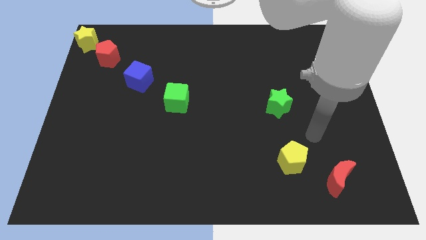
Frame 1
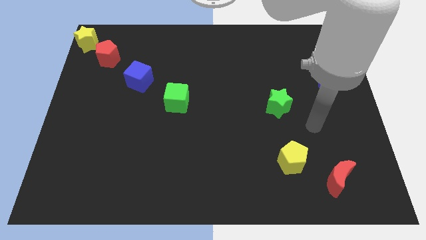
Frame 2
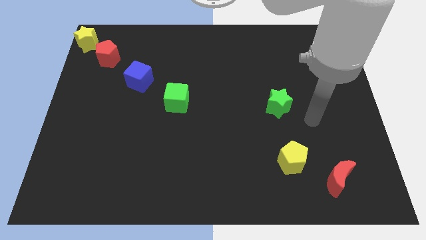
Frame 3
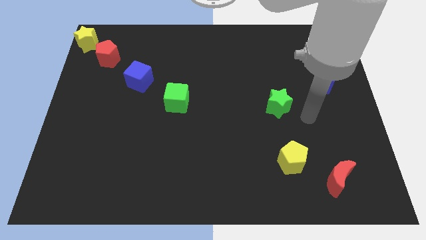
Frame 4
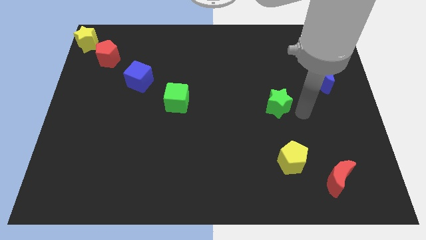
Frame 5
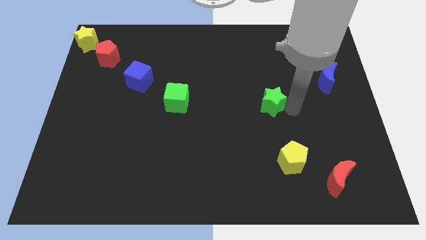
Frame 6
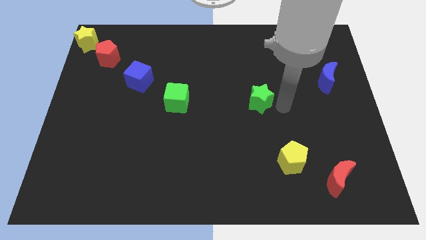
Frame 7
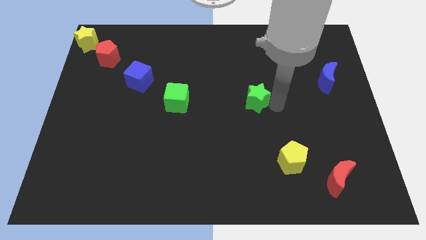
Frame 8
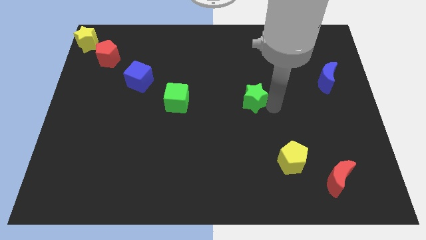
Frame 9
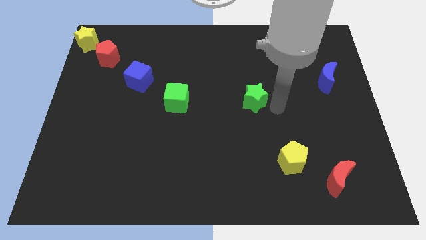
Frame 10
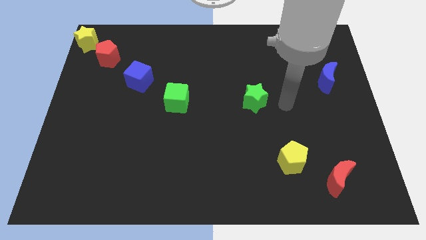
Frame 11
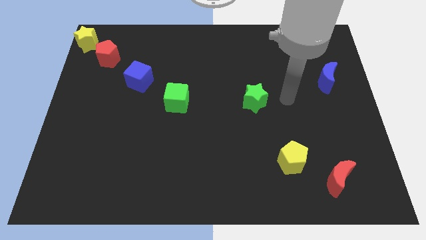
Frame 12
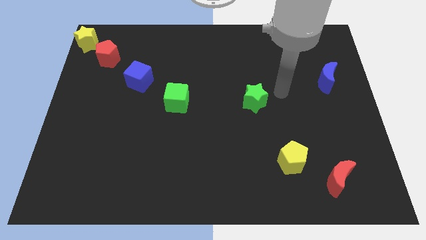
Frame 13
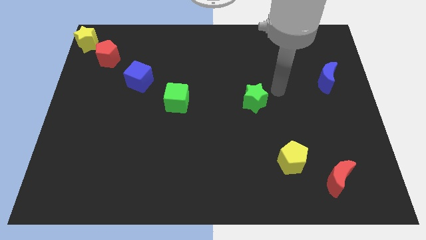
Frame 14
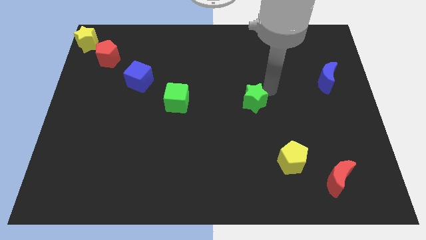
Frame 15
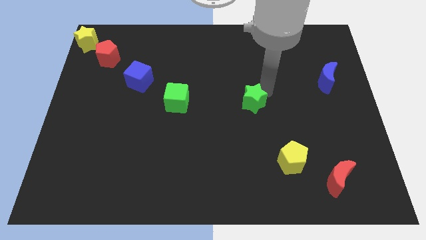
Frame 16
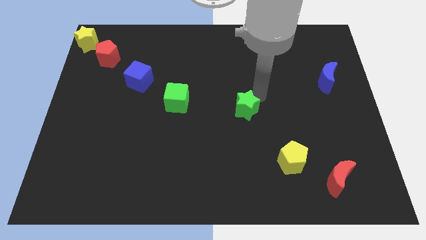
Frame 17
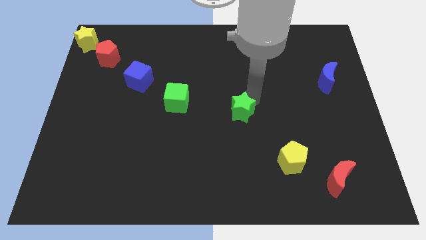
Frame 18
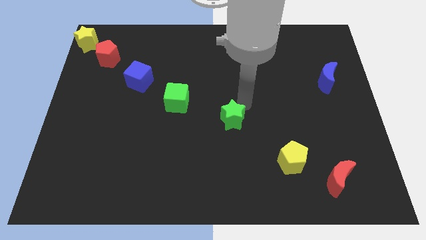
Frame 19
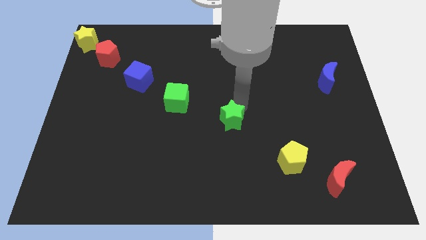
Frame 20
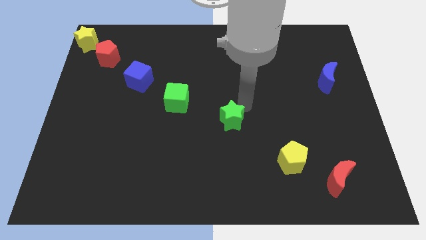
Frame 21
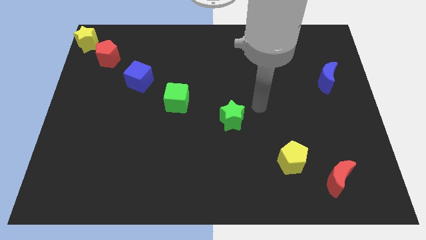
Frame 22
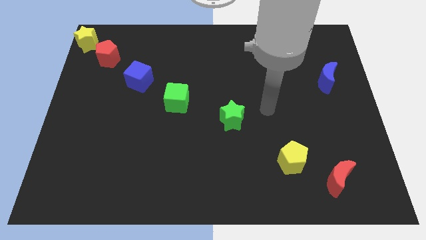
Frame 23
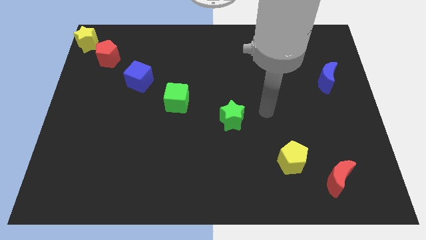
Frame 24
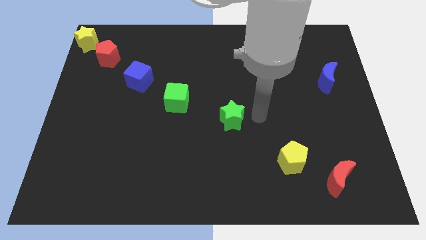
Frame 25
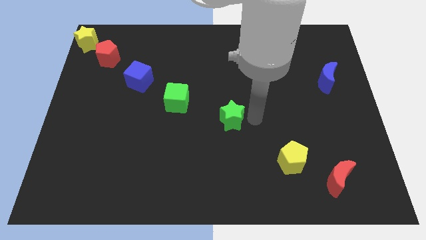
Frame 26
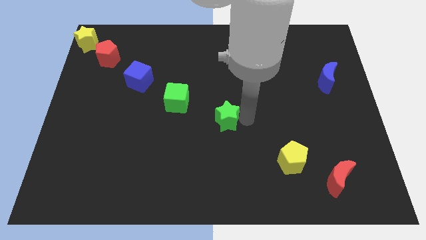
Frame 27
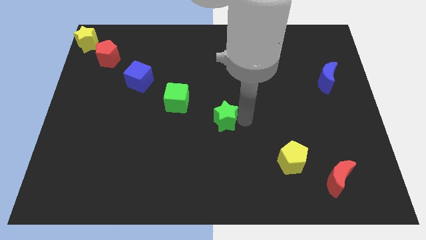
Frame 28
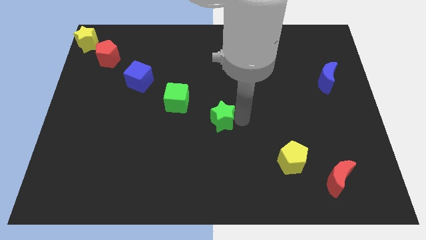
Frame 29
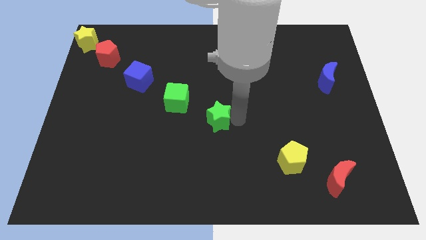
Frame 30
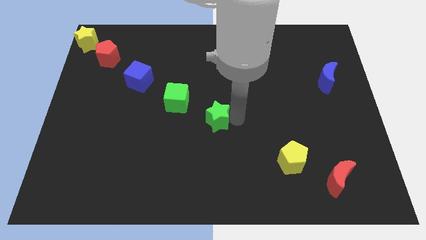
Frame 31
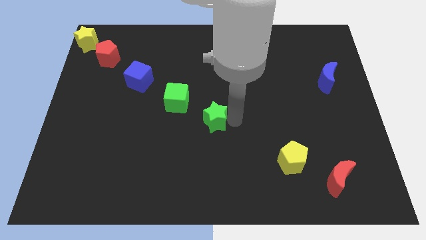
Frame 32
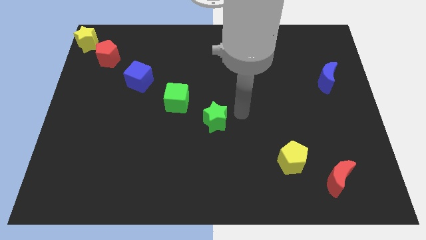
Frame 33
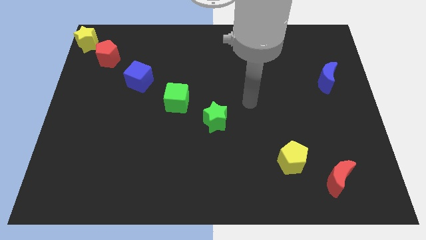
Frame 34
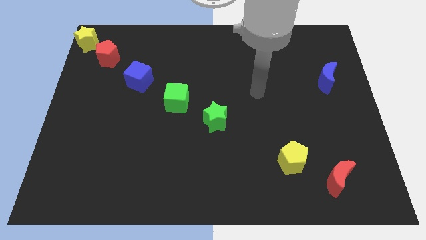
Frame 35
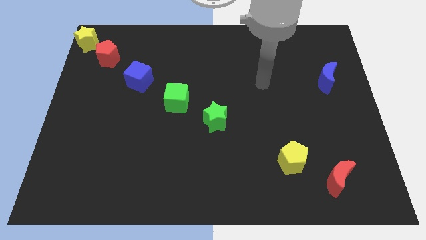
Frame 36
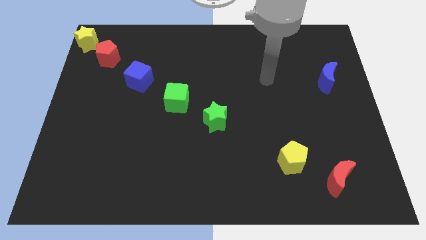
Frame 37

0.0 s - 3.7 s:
place green star to the center of the board

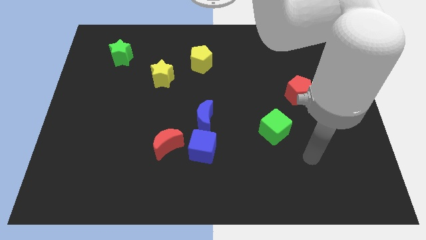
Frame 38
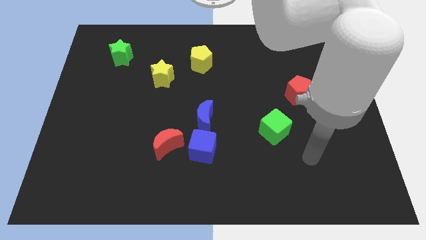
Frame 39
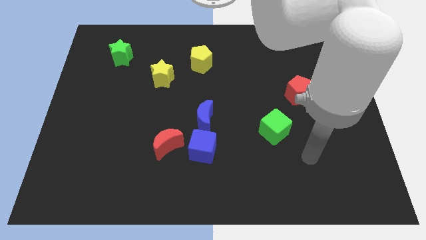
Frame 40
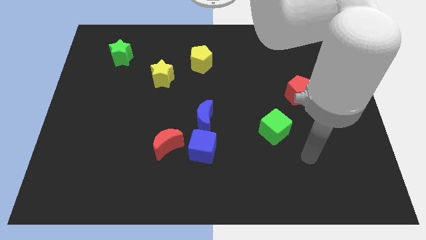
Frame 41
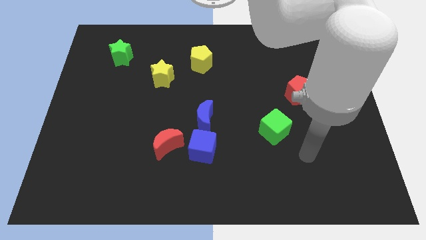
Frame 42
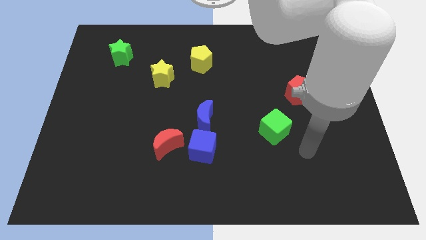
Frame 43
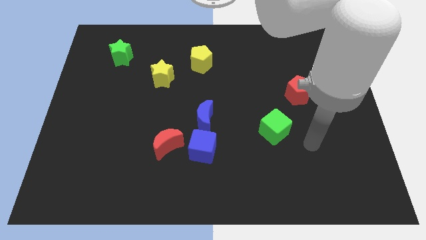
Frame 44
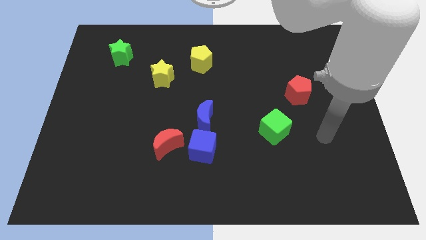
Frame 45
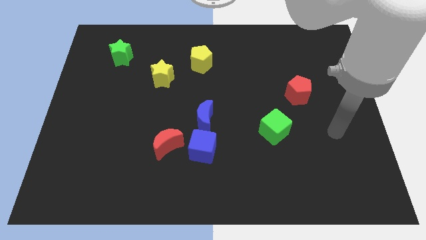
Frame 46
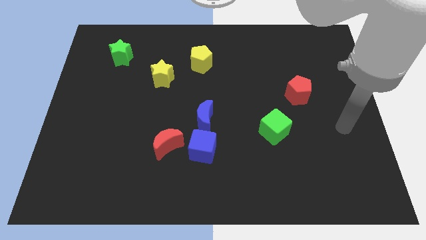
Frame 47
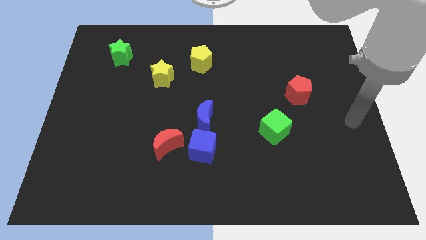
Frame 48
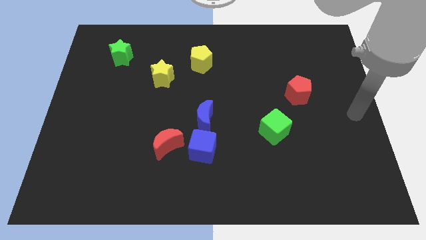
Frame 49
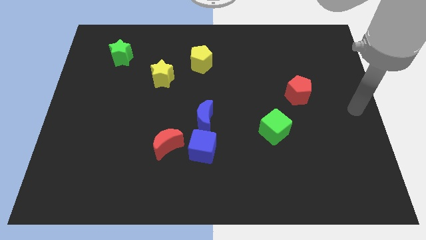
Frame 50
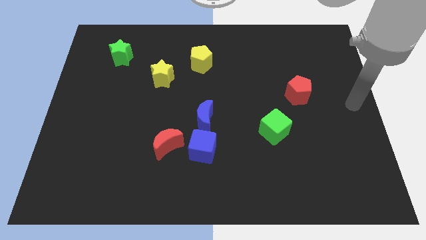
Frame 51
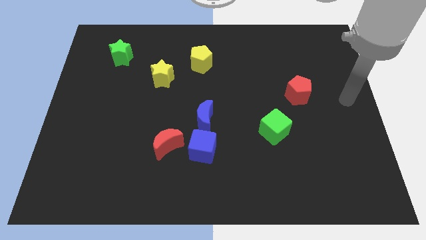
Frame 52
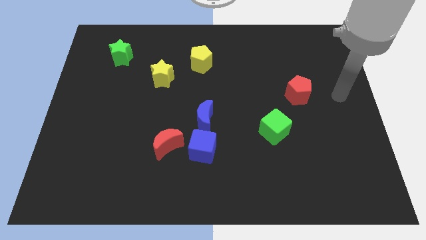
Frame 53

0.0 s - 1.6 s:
place the arm at the right side of the red pentagon

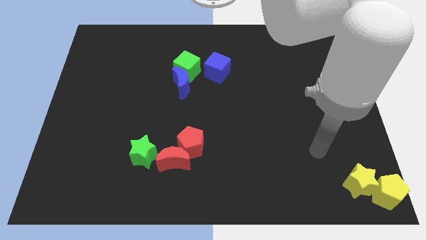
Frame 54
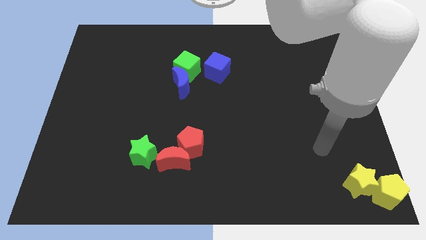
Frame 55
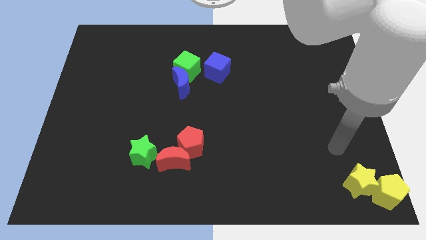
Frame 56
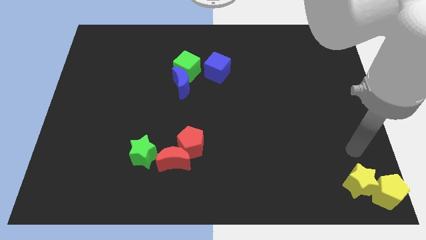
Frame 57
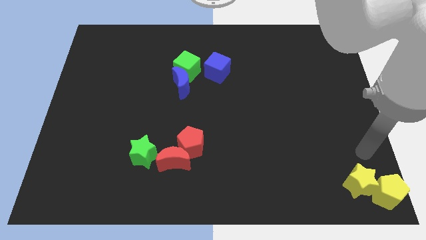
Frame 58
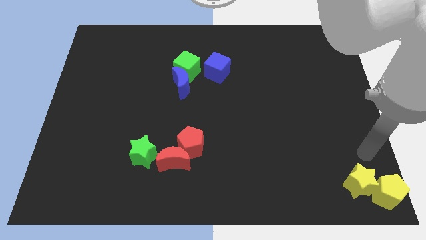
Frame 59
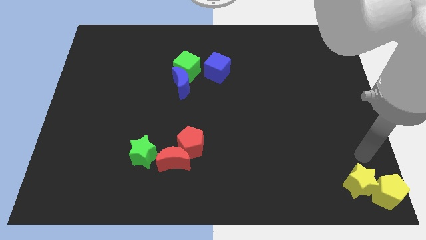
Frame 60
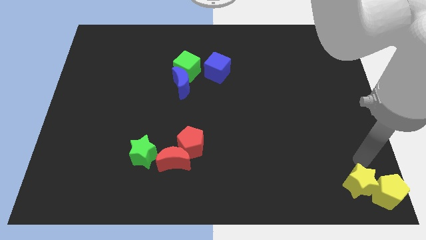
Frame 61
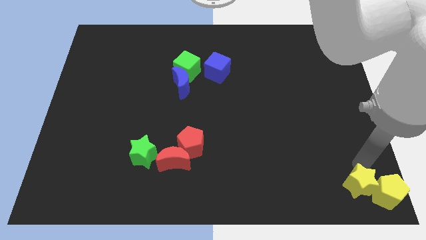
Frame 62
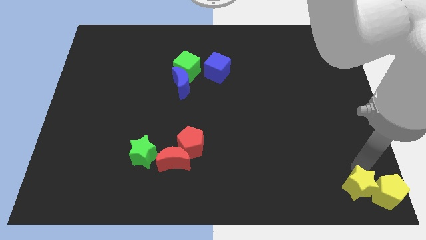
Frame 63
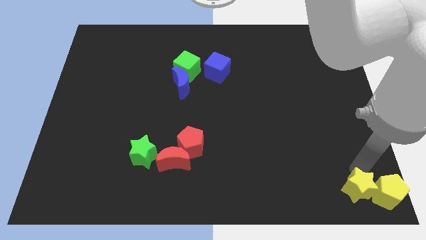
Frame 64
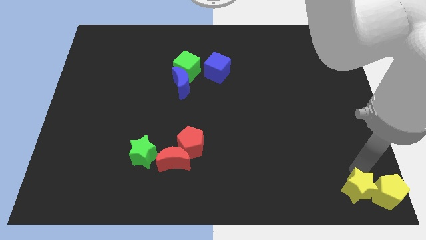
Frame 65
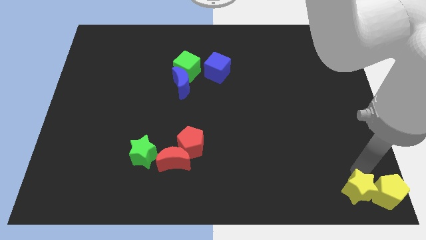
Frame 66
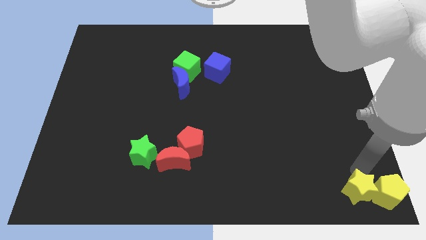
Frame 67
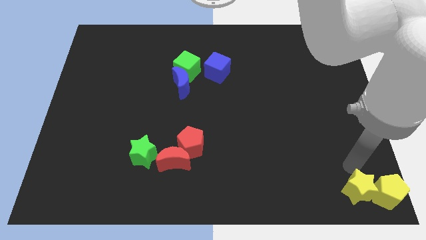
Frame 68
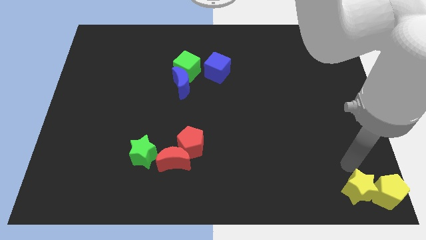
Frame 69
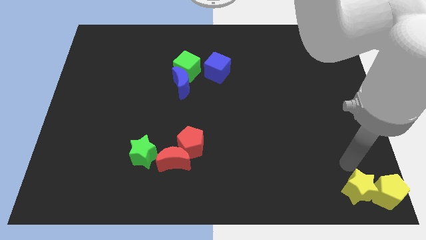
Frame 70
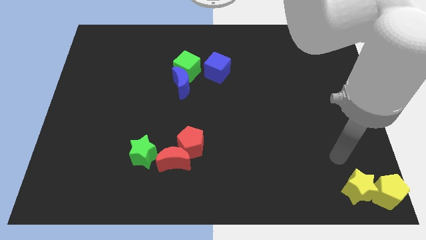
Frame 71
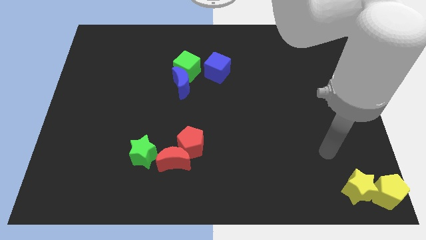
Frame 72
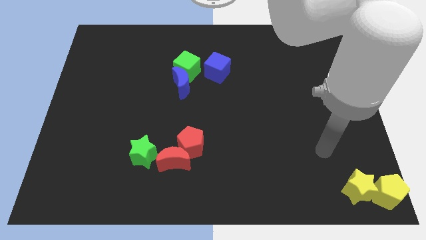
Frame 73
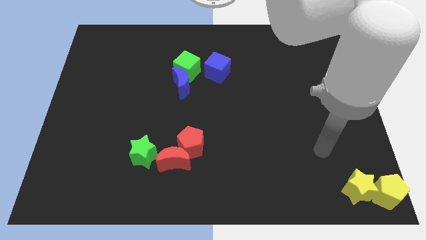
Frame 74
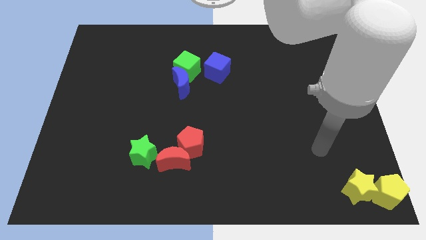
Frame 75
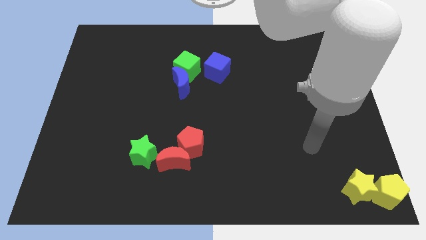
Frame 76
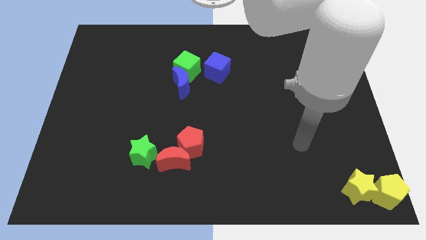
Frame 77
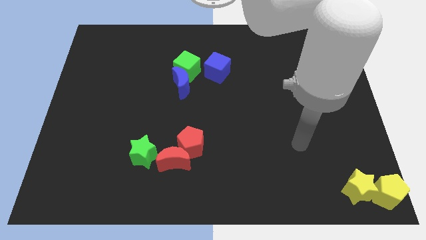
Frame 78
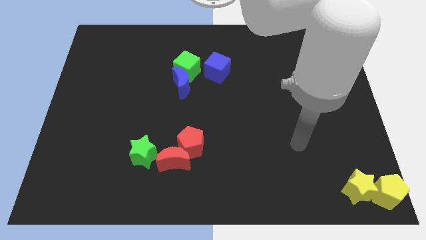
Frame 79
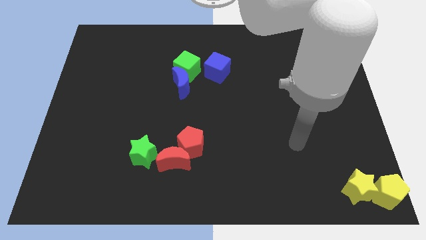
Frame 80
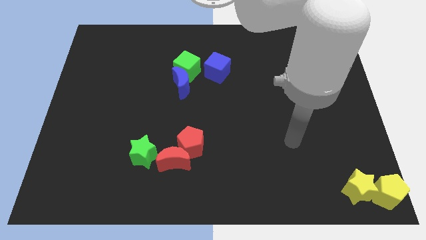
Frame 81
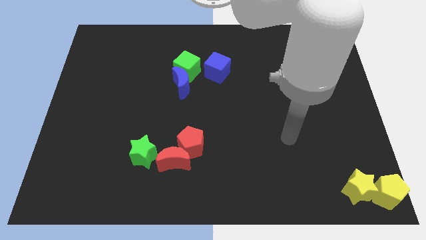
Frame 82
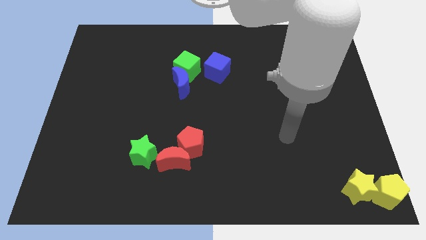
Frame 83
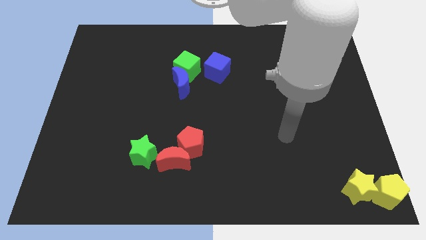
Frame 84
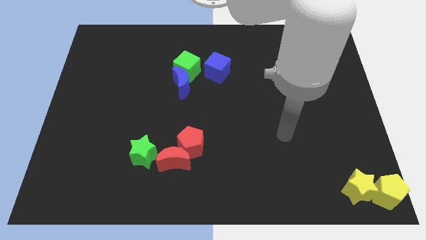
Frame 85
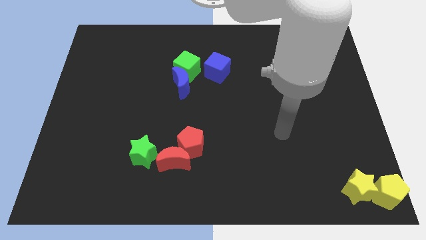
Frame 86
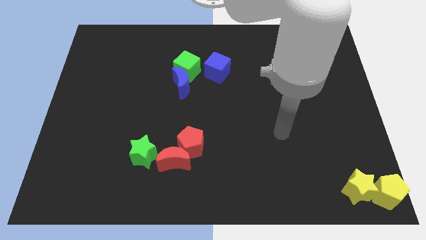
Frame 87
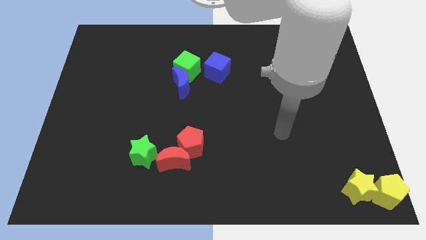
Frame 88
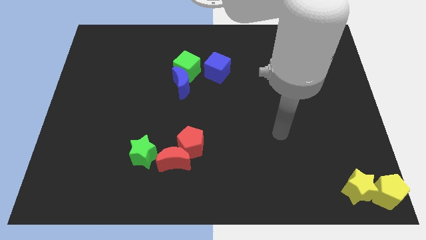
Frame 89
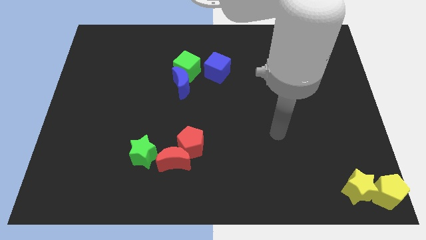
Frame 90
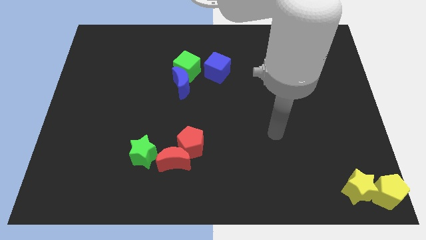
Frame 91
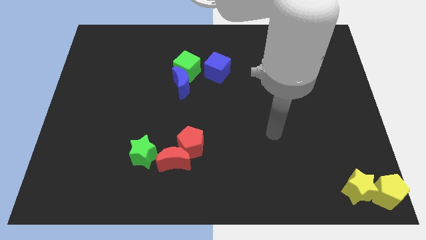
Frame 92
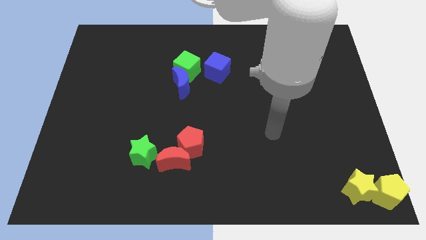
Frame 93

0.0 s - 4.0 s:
move the yellow star slightly to the down
